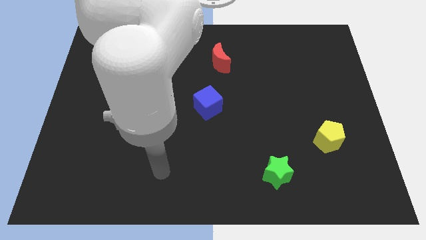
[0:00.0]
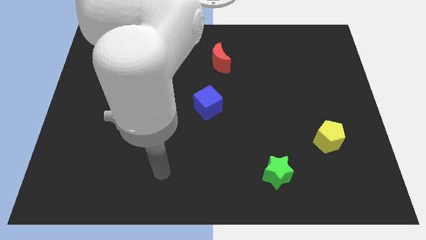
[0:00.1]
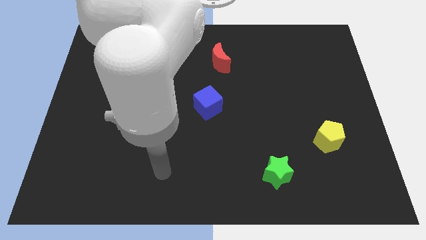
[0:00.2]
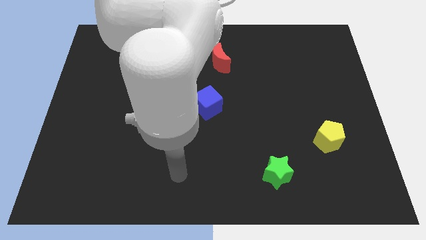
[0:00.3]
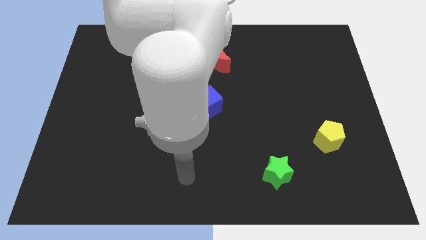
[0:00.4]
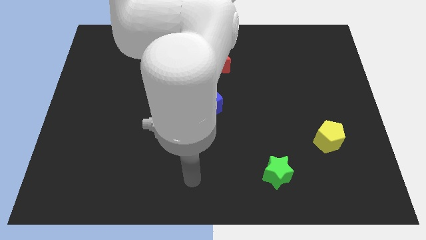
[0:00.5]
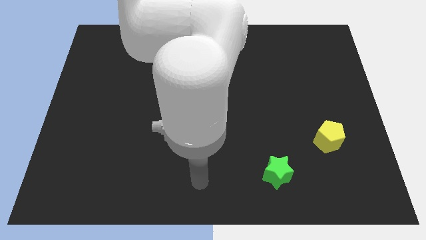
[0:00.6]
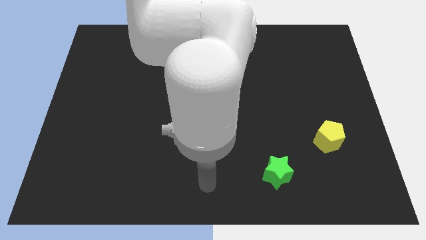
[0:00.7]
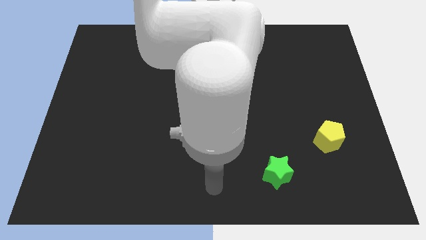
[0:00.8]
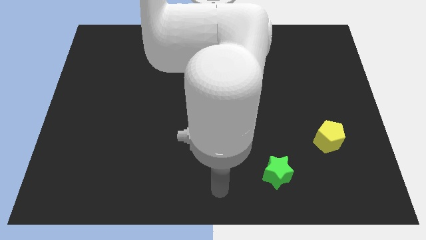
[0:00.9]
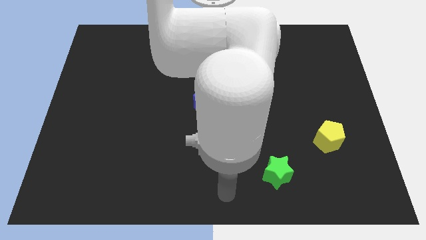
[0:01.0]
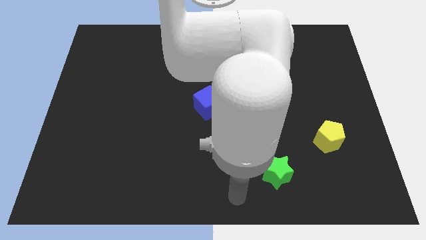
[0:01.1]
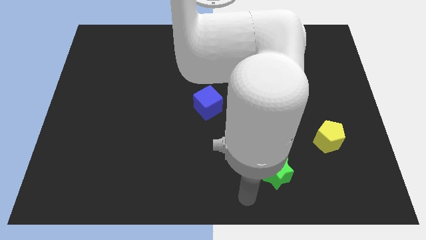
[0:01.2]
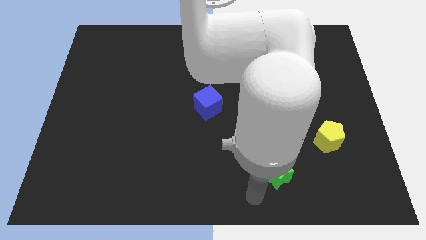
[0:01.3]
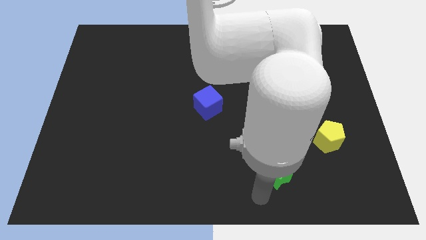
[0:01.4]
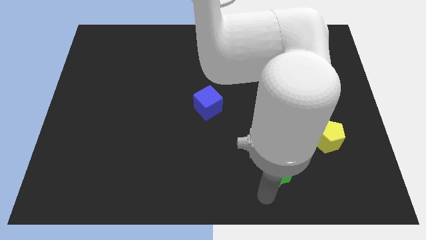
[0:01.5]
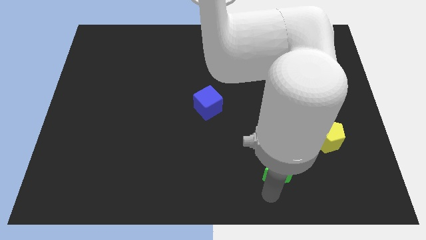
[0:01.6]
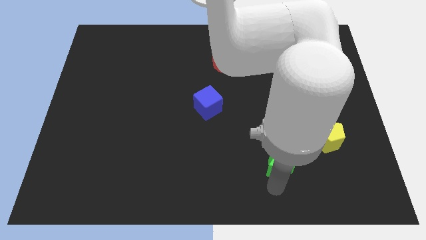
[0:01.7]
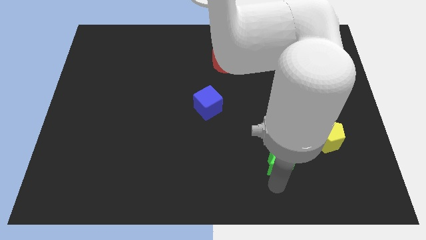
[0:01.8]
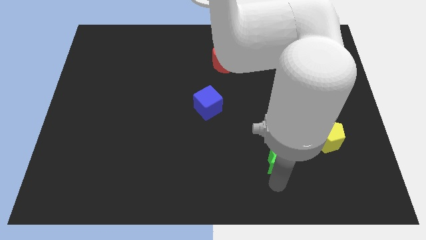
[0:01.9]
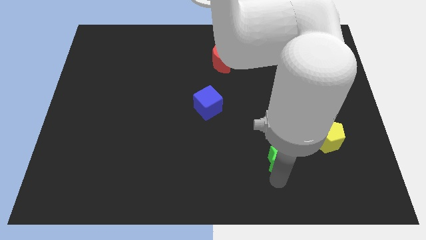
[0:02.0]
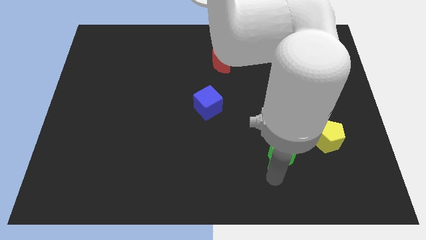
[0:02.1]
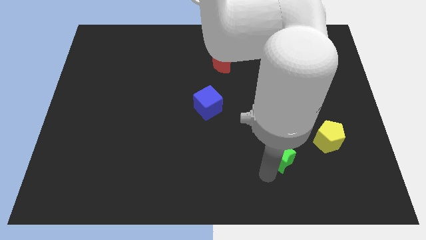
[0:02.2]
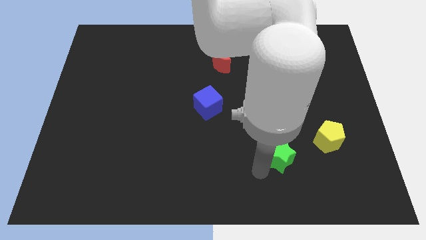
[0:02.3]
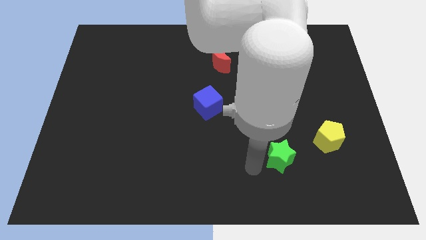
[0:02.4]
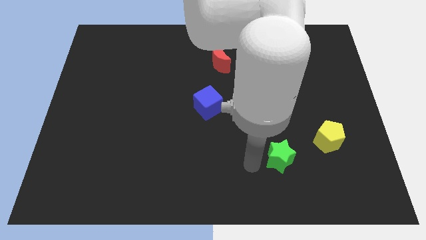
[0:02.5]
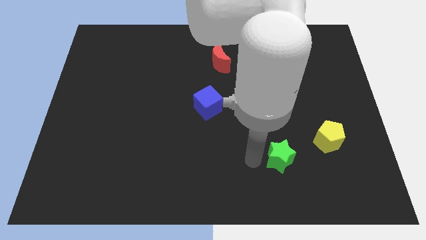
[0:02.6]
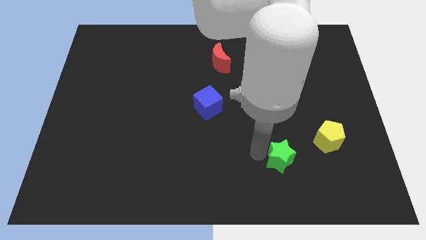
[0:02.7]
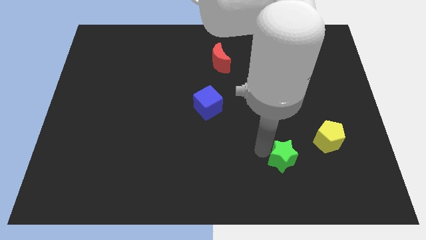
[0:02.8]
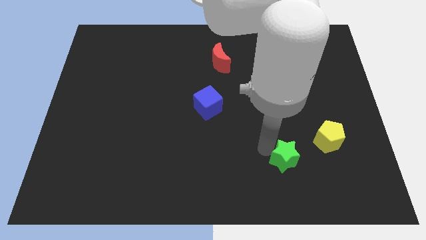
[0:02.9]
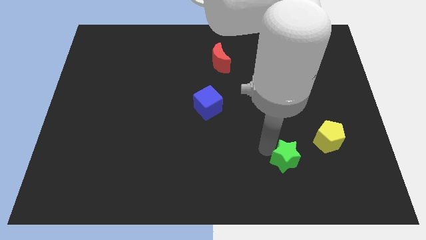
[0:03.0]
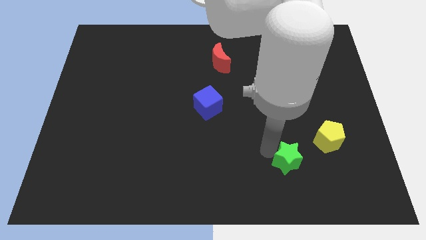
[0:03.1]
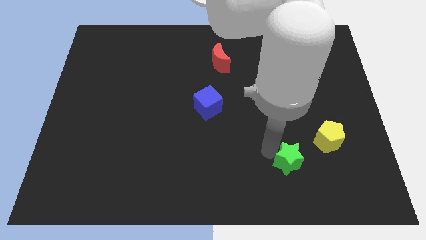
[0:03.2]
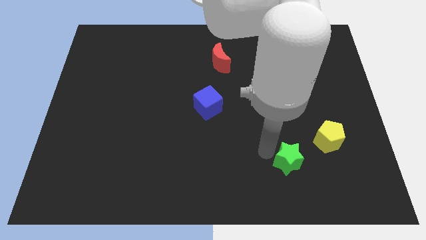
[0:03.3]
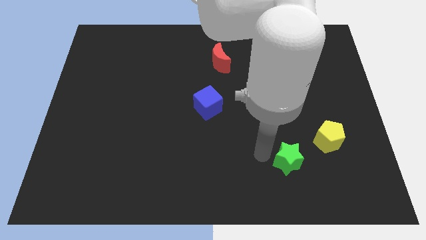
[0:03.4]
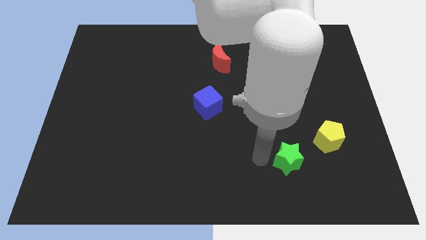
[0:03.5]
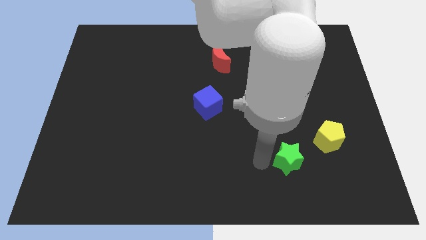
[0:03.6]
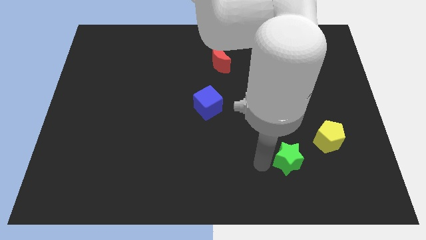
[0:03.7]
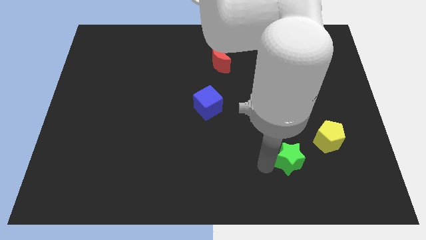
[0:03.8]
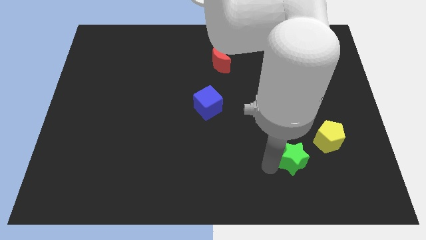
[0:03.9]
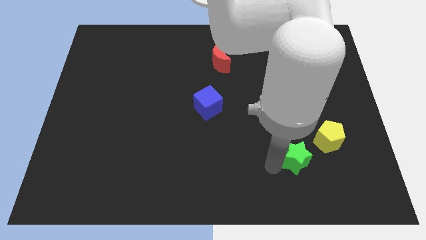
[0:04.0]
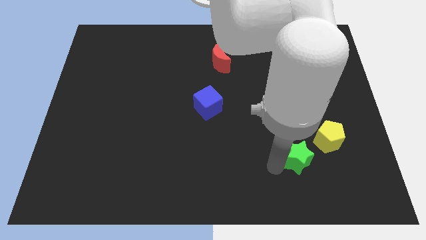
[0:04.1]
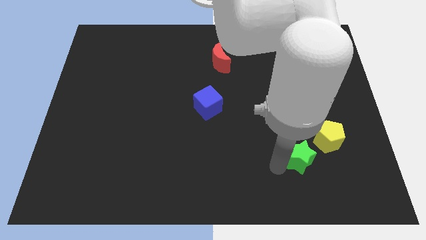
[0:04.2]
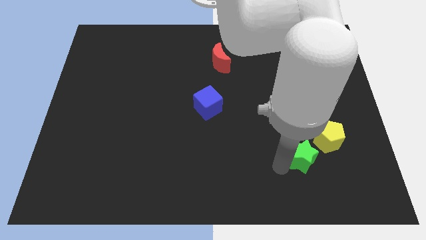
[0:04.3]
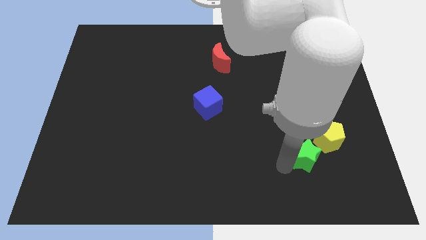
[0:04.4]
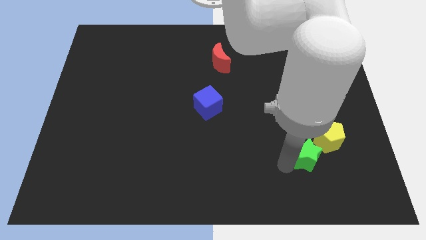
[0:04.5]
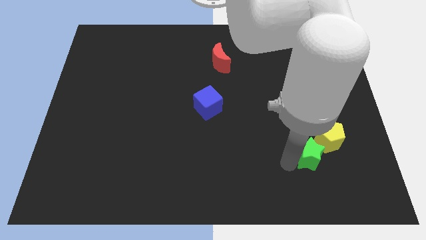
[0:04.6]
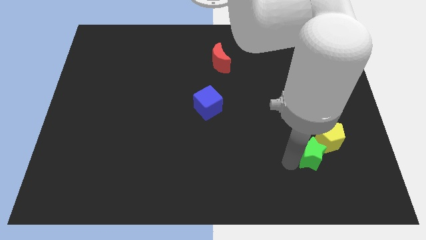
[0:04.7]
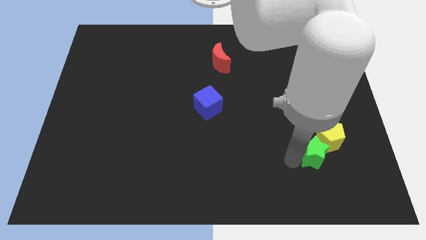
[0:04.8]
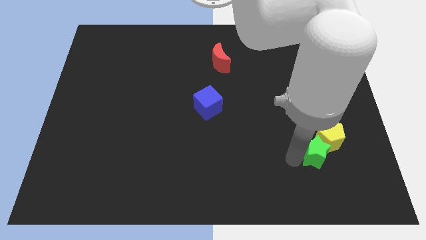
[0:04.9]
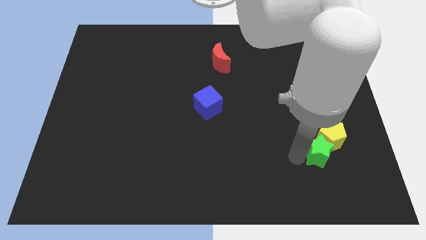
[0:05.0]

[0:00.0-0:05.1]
push the star towards the yellow block

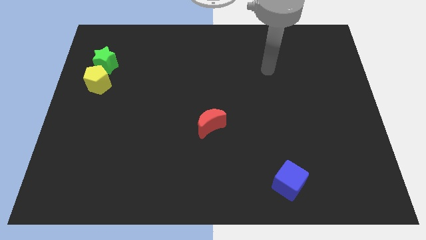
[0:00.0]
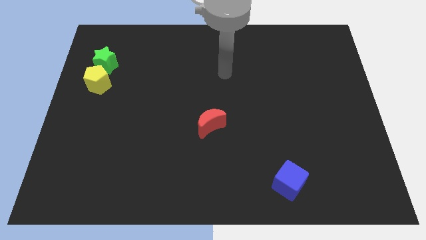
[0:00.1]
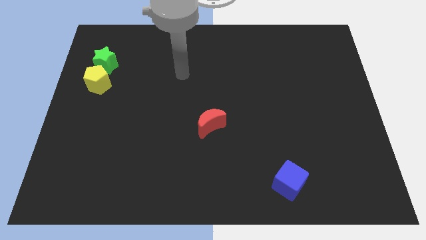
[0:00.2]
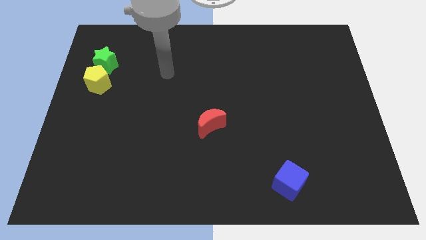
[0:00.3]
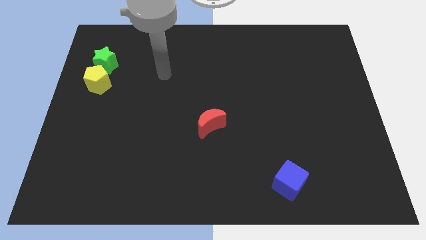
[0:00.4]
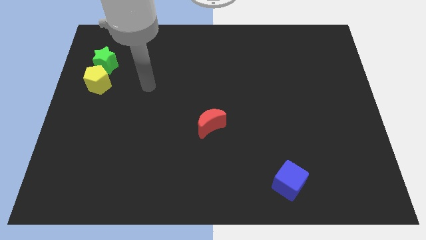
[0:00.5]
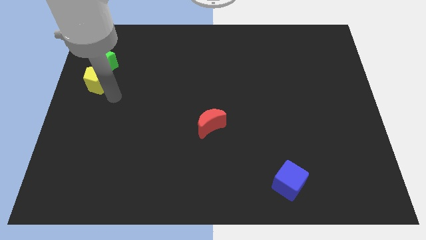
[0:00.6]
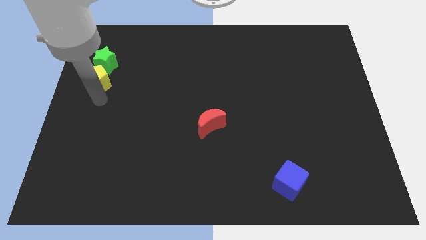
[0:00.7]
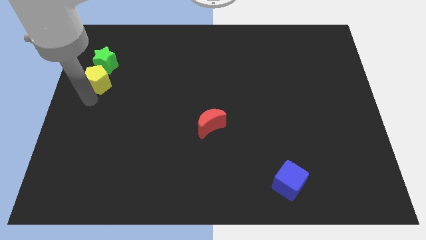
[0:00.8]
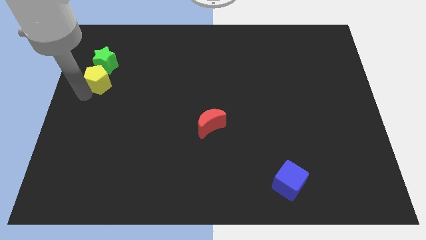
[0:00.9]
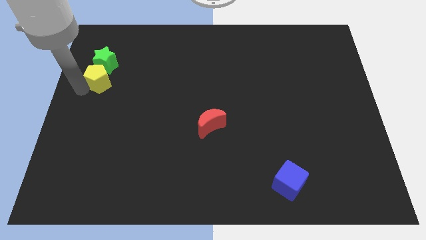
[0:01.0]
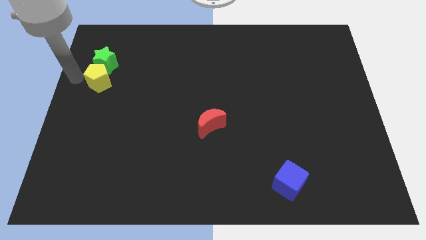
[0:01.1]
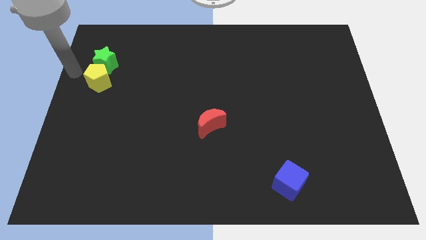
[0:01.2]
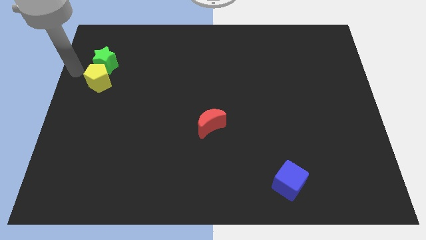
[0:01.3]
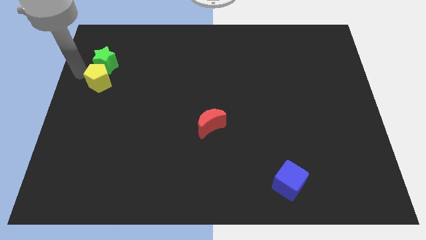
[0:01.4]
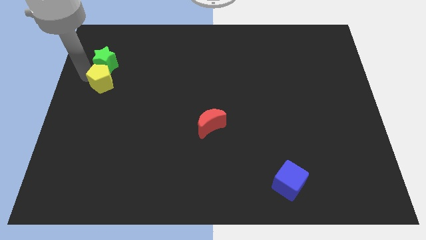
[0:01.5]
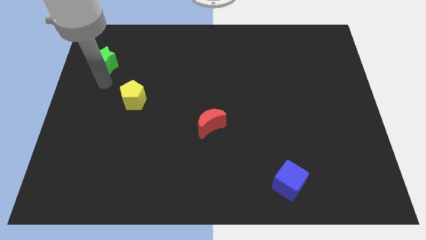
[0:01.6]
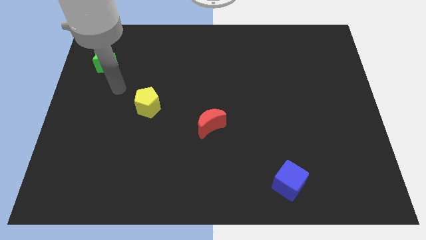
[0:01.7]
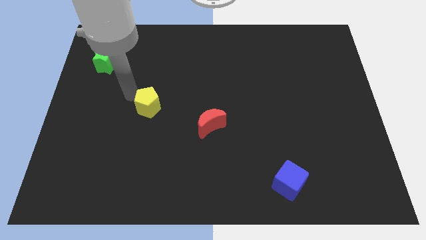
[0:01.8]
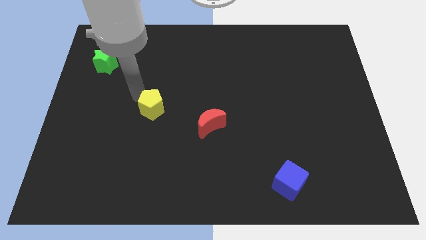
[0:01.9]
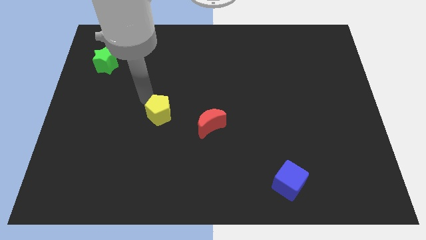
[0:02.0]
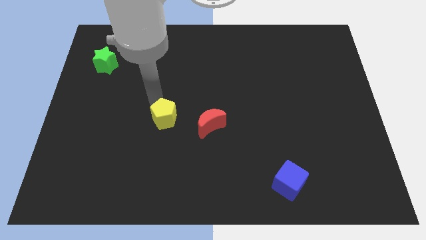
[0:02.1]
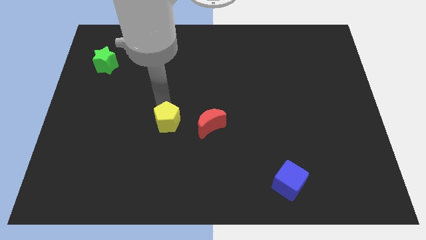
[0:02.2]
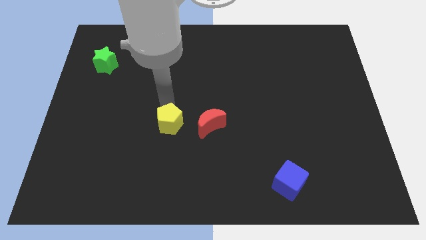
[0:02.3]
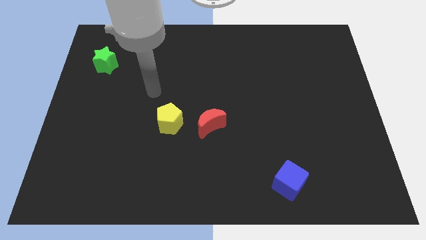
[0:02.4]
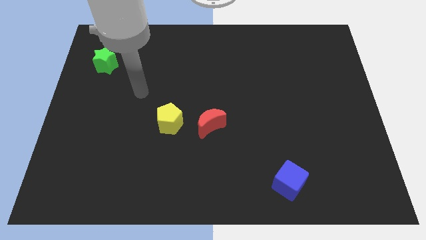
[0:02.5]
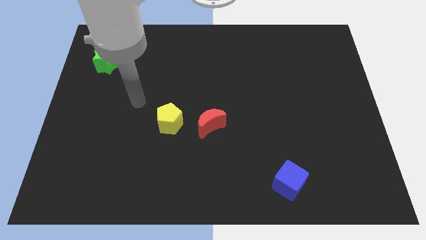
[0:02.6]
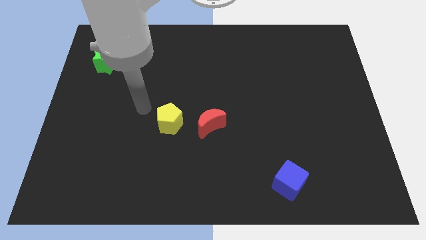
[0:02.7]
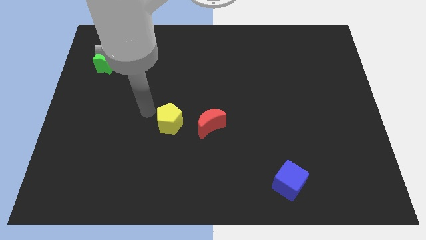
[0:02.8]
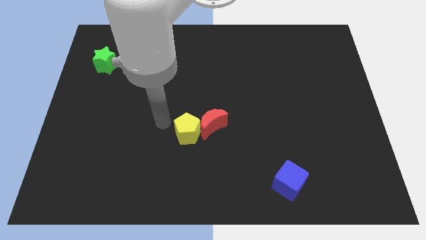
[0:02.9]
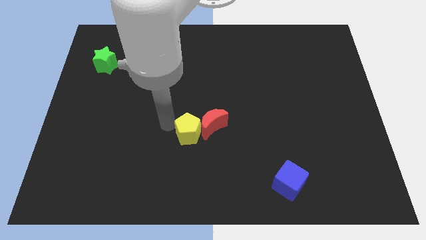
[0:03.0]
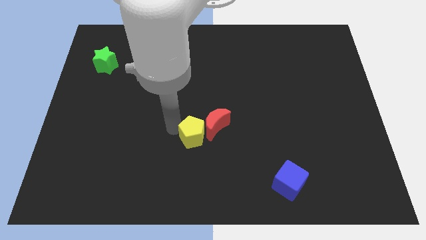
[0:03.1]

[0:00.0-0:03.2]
put the yellow pentagon next to the red moon

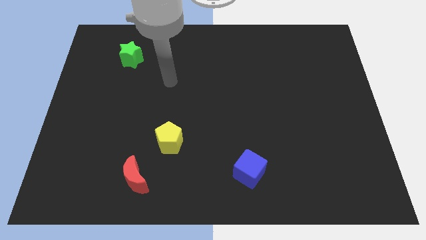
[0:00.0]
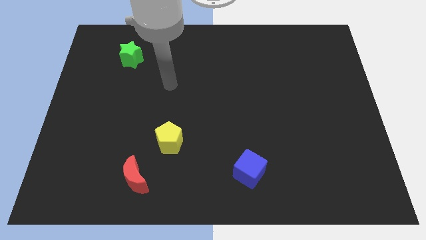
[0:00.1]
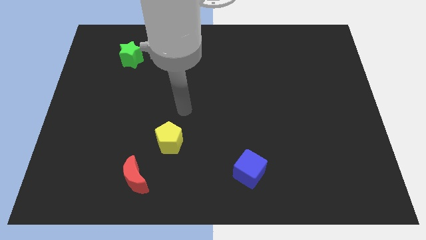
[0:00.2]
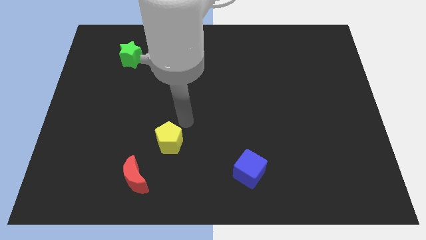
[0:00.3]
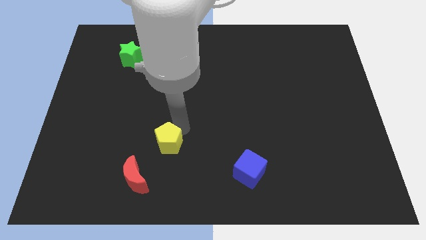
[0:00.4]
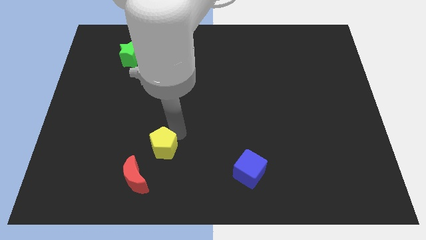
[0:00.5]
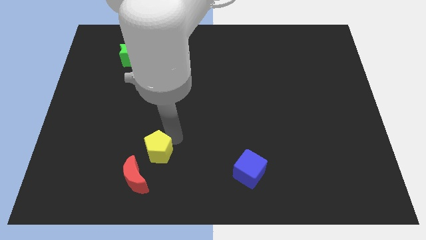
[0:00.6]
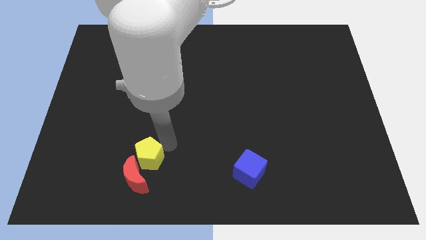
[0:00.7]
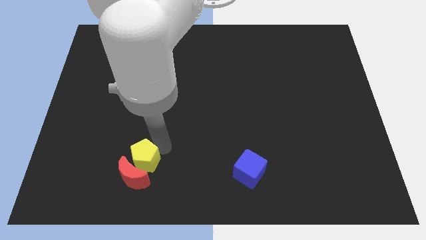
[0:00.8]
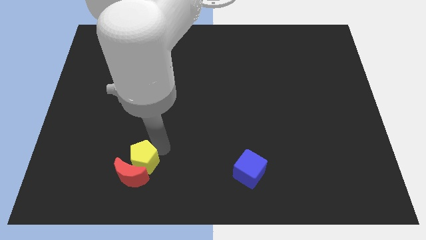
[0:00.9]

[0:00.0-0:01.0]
move the yellow pentagon next to the red block
